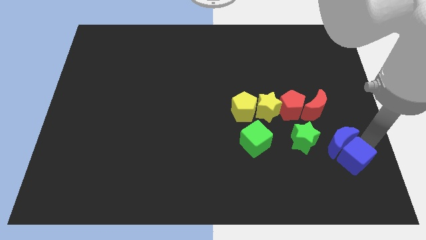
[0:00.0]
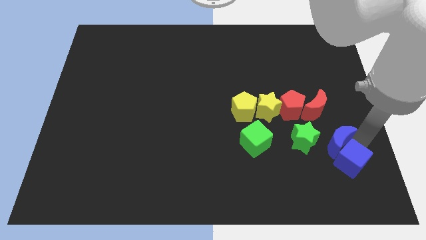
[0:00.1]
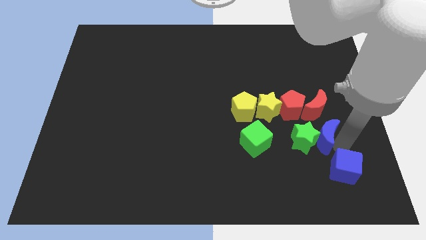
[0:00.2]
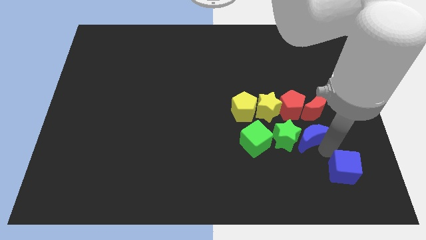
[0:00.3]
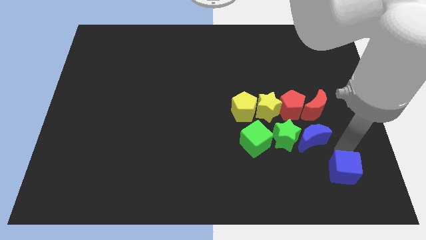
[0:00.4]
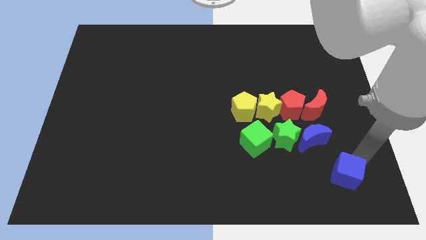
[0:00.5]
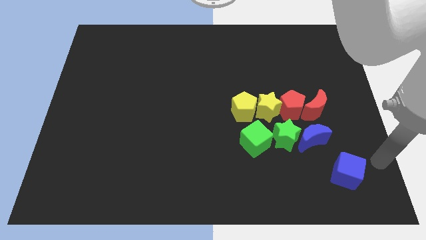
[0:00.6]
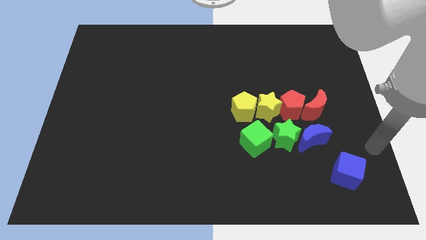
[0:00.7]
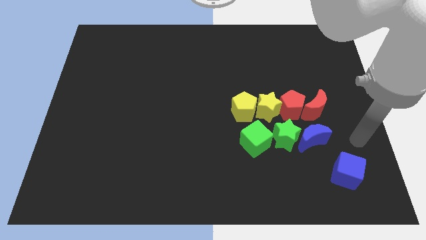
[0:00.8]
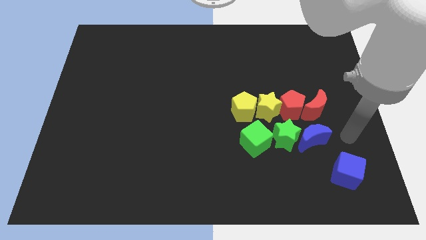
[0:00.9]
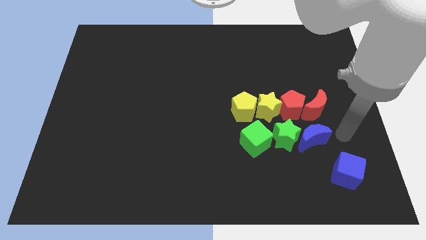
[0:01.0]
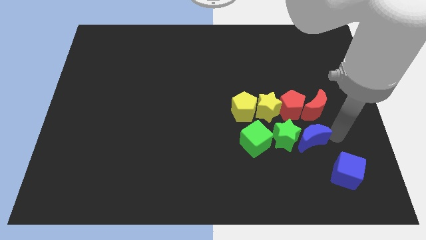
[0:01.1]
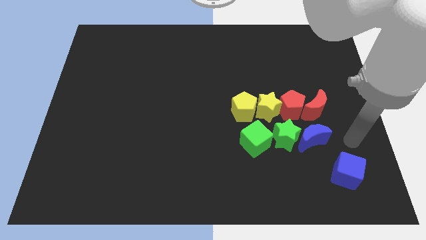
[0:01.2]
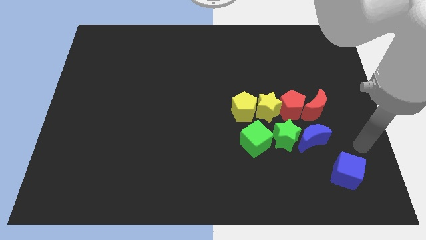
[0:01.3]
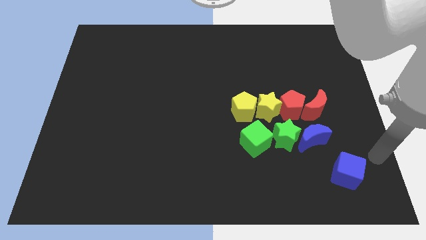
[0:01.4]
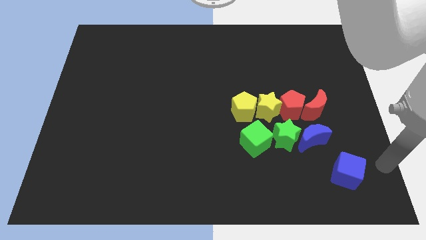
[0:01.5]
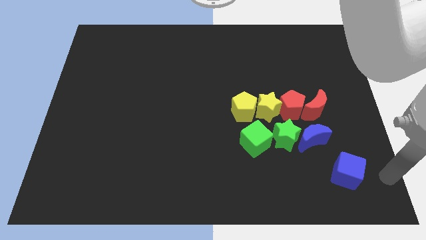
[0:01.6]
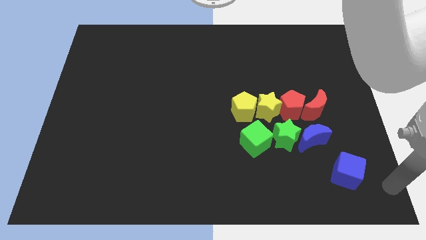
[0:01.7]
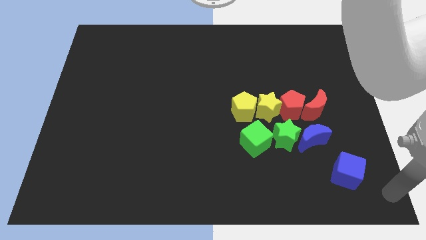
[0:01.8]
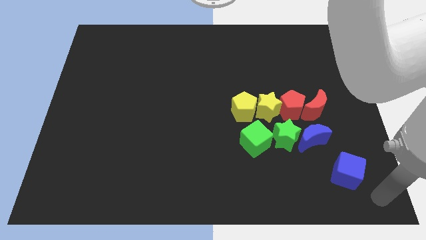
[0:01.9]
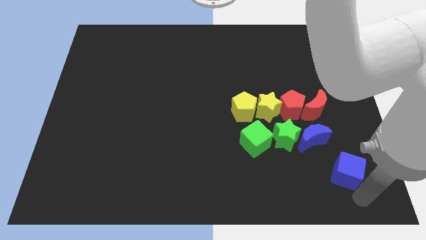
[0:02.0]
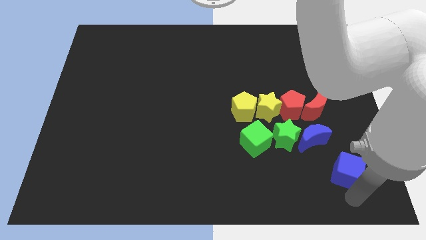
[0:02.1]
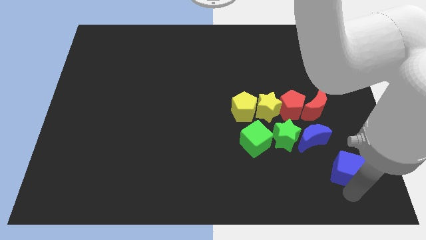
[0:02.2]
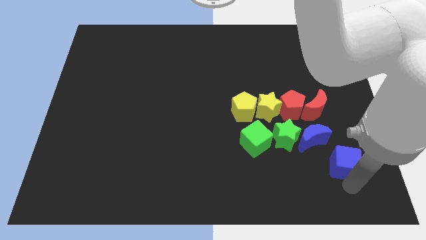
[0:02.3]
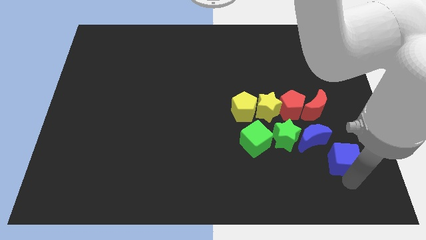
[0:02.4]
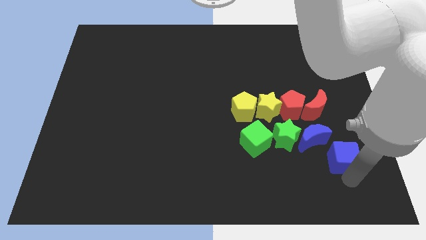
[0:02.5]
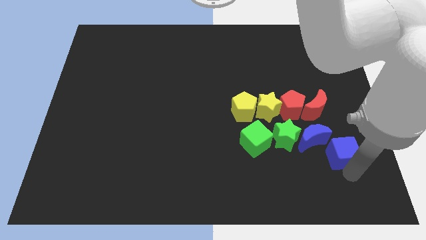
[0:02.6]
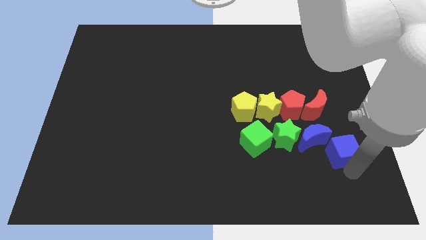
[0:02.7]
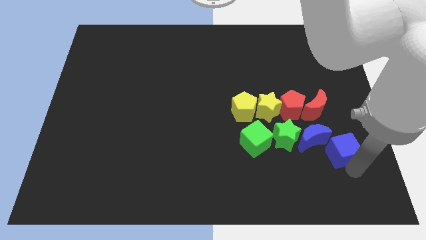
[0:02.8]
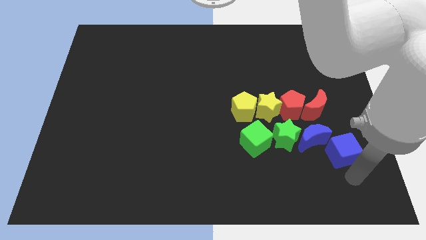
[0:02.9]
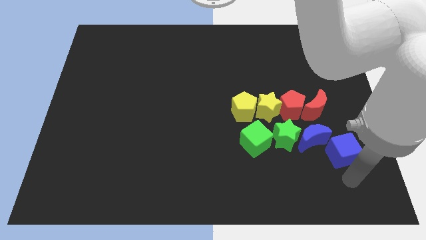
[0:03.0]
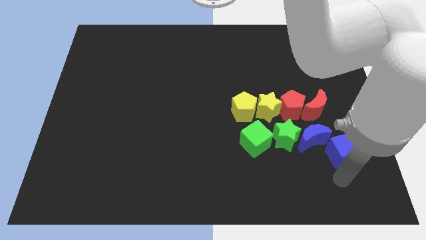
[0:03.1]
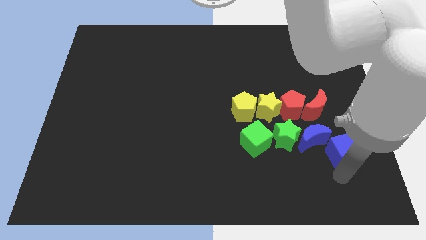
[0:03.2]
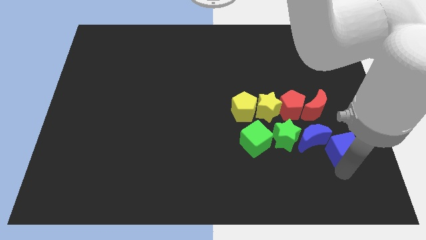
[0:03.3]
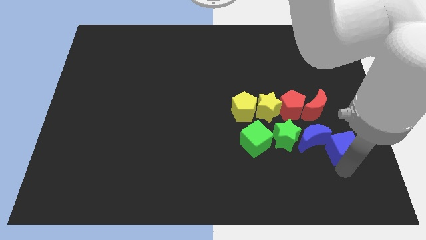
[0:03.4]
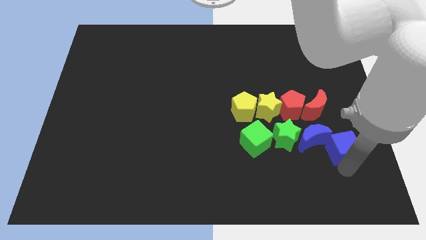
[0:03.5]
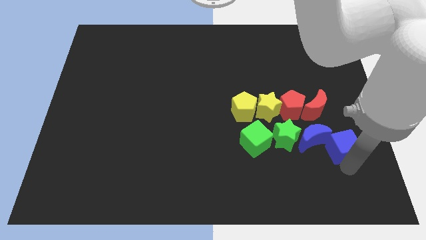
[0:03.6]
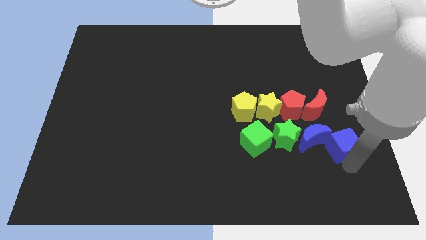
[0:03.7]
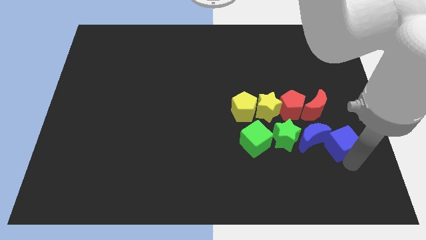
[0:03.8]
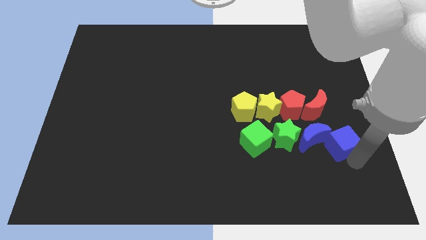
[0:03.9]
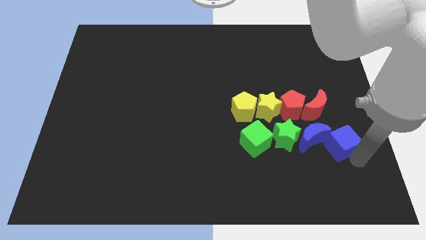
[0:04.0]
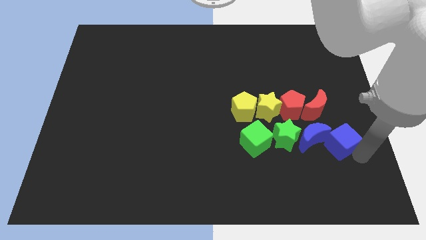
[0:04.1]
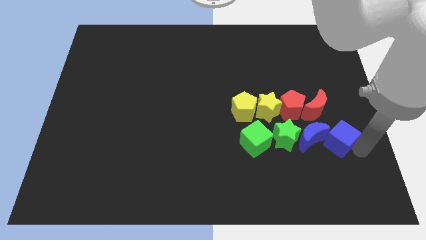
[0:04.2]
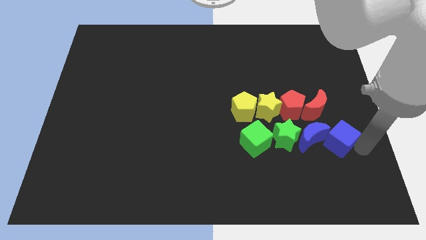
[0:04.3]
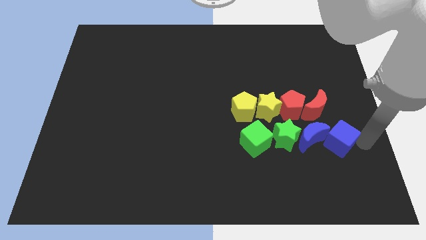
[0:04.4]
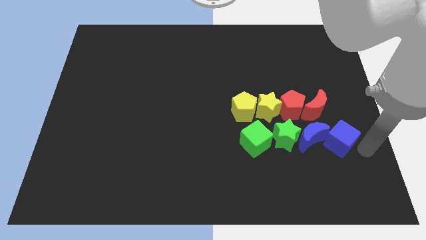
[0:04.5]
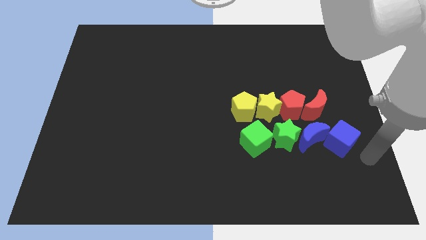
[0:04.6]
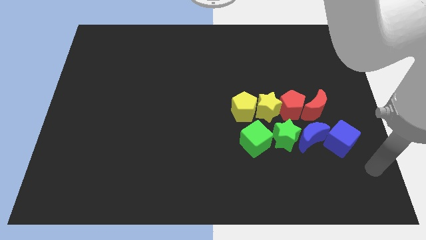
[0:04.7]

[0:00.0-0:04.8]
place the blue cube at the right side of the blue moon

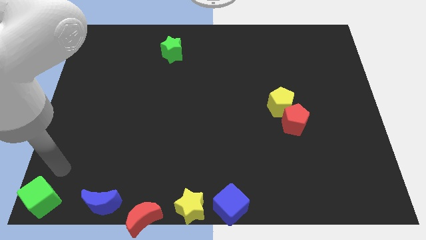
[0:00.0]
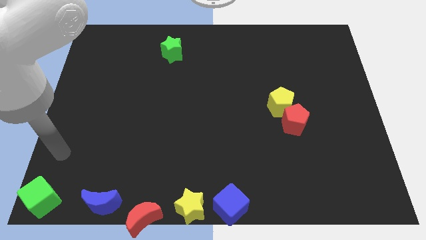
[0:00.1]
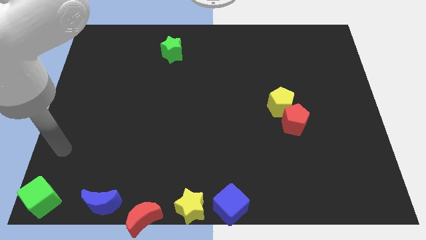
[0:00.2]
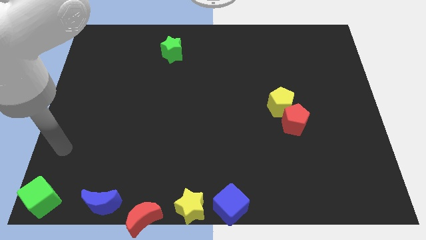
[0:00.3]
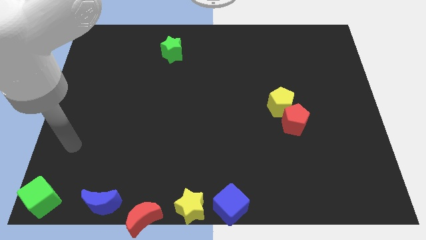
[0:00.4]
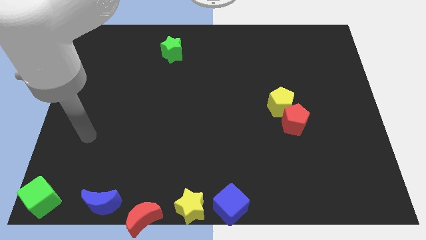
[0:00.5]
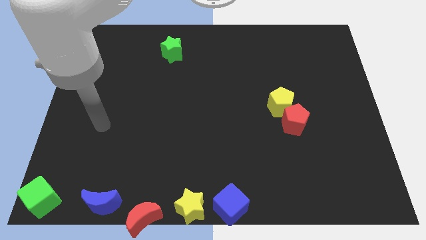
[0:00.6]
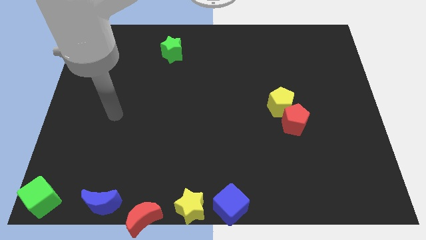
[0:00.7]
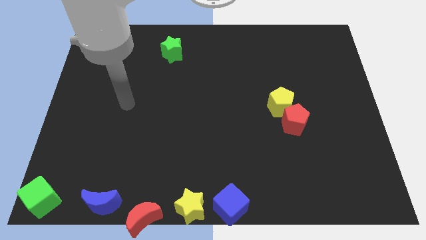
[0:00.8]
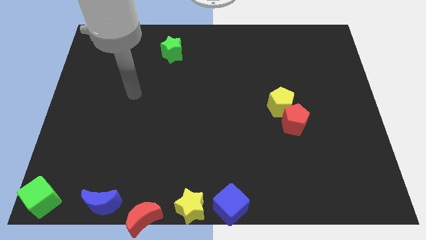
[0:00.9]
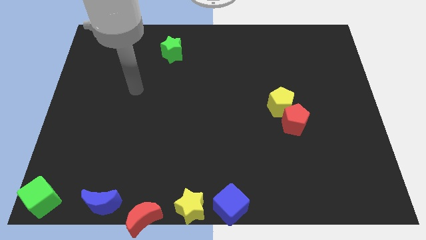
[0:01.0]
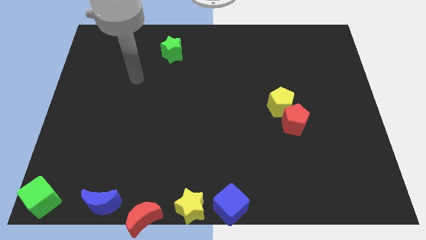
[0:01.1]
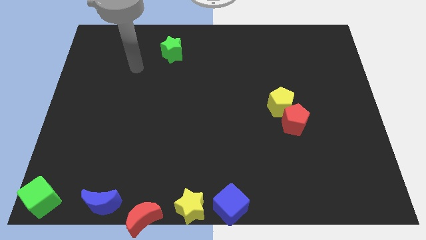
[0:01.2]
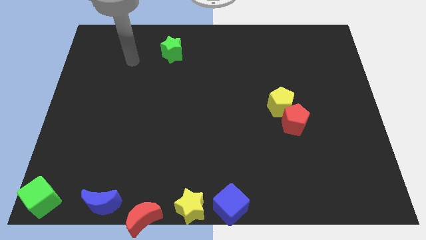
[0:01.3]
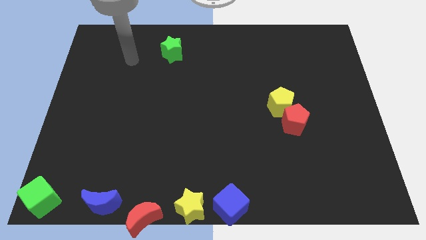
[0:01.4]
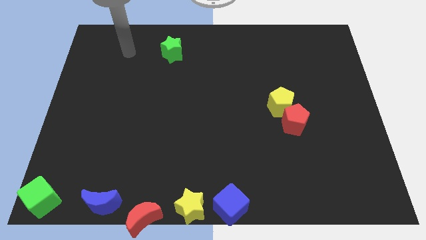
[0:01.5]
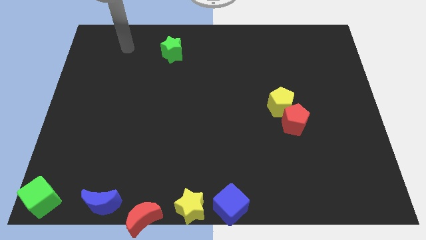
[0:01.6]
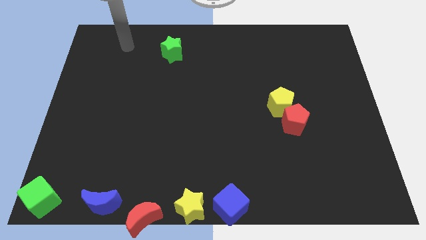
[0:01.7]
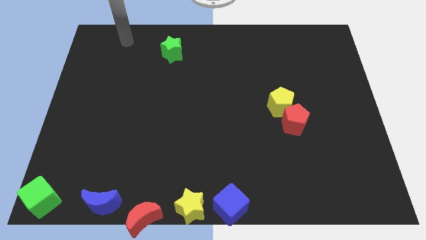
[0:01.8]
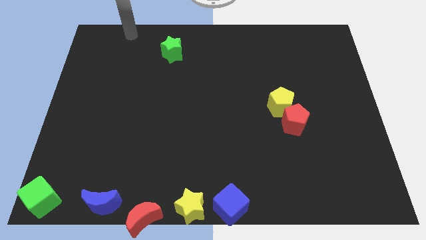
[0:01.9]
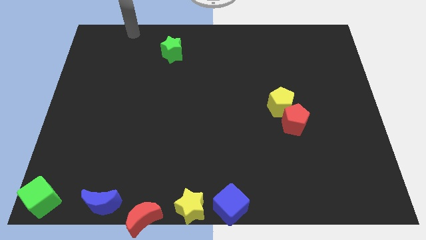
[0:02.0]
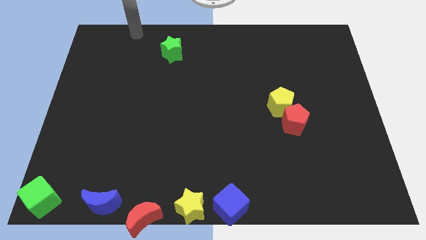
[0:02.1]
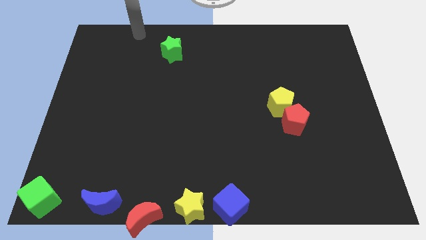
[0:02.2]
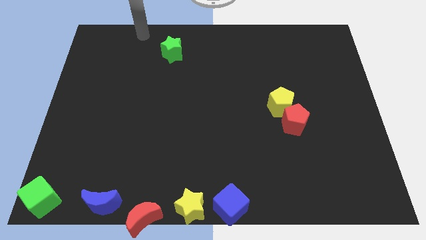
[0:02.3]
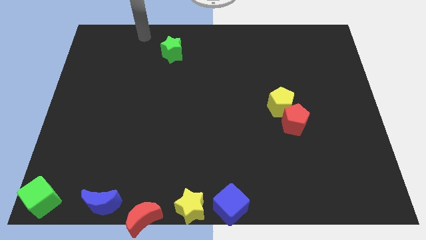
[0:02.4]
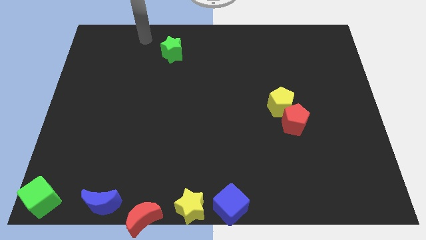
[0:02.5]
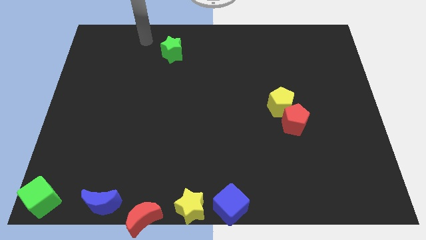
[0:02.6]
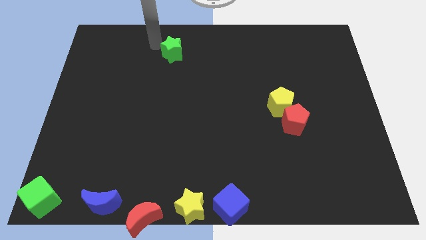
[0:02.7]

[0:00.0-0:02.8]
point your arm at the left of the green star

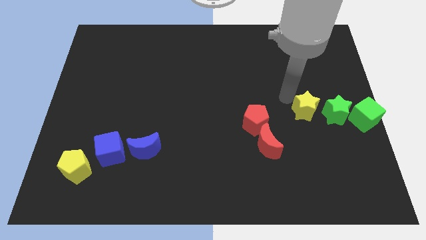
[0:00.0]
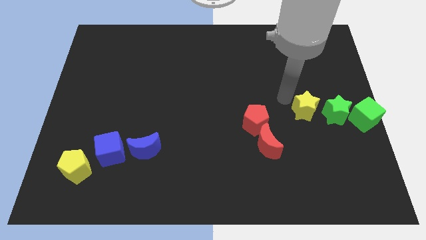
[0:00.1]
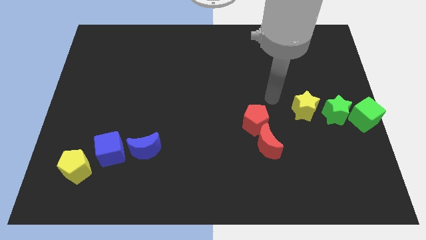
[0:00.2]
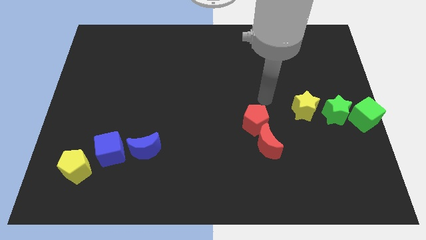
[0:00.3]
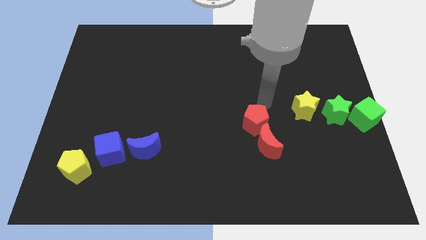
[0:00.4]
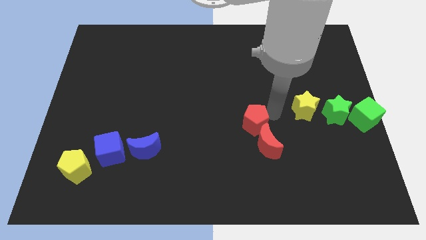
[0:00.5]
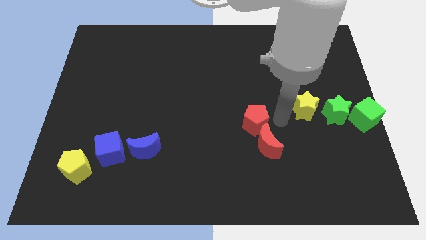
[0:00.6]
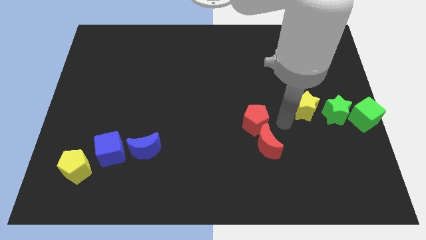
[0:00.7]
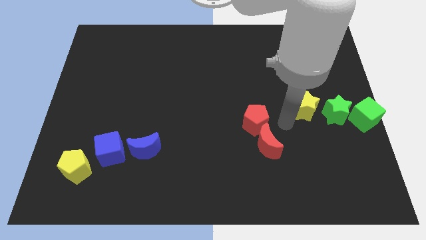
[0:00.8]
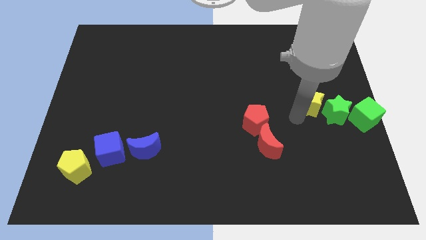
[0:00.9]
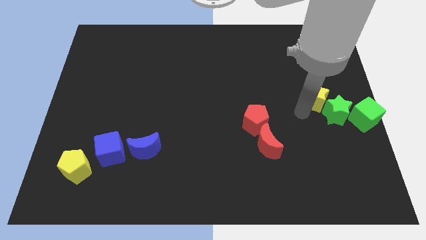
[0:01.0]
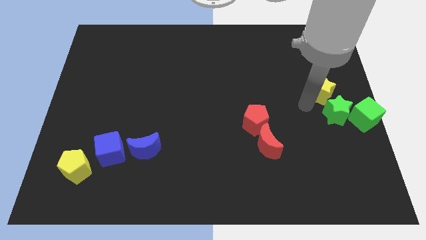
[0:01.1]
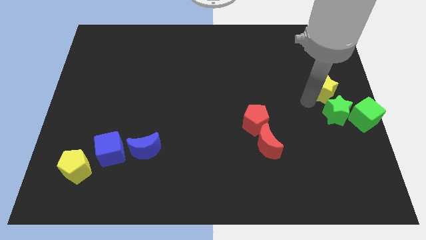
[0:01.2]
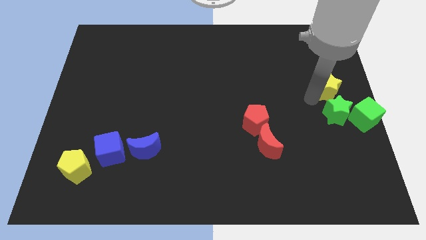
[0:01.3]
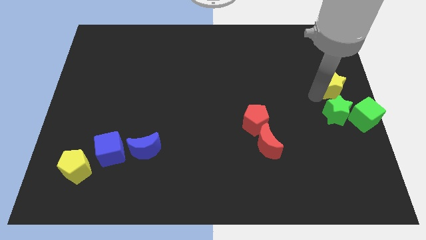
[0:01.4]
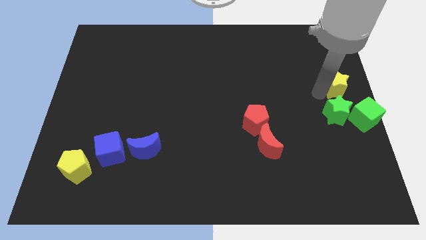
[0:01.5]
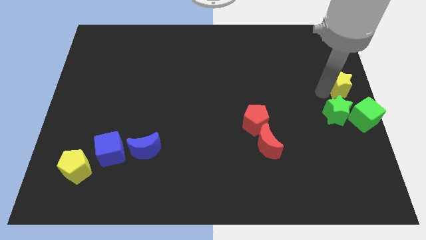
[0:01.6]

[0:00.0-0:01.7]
move the yellow star to the top of the green star
